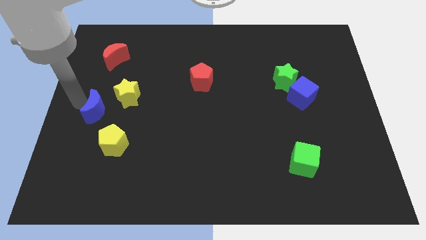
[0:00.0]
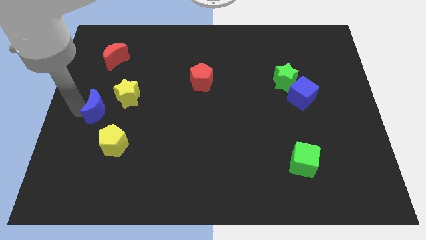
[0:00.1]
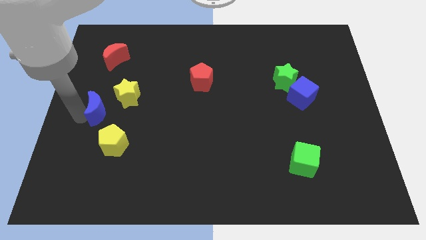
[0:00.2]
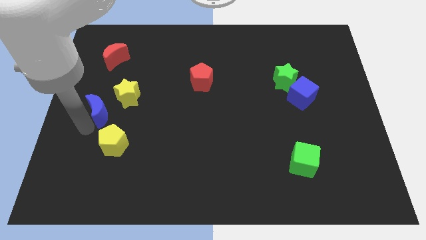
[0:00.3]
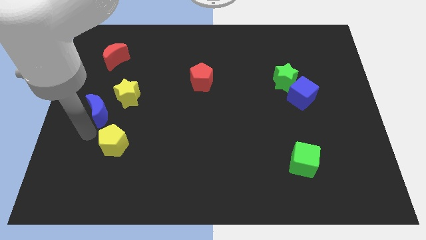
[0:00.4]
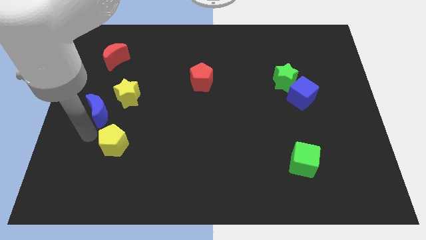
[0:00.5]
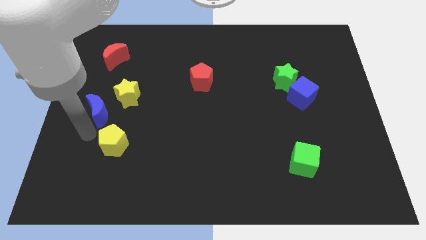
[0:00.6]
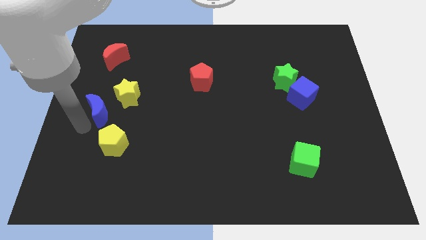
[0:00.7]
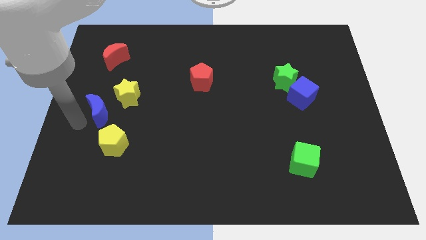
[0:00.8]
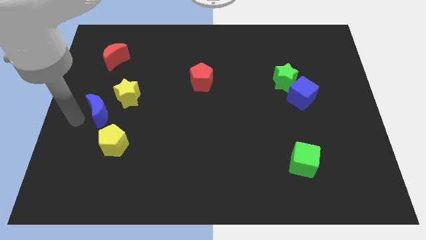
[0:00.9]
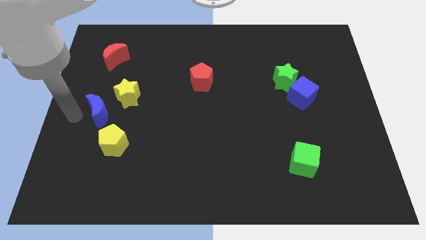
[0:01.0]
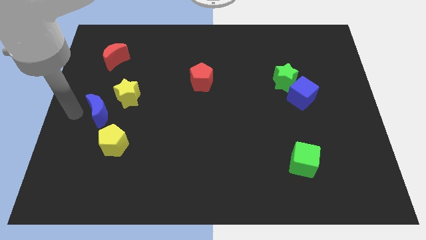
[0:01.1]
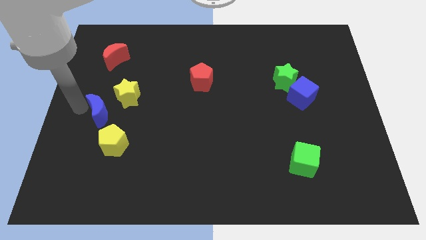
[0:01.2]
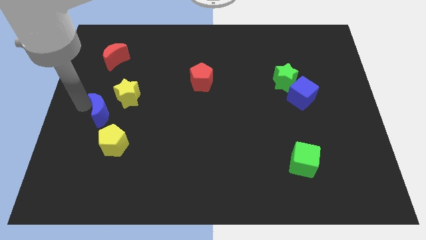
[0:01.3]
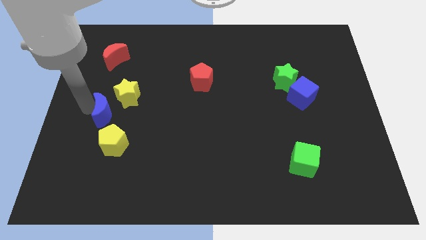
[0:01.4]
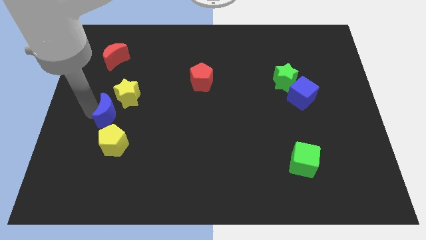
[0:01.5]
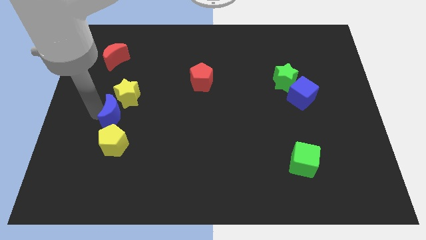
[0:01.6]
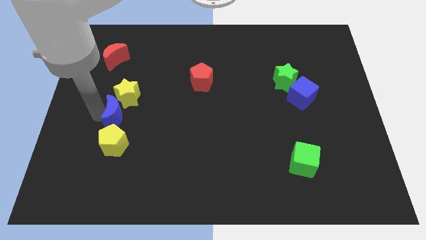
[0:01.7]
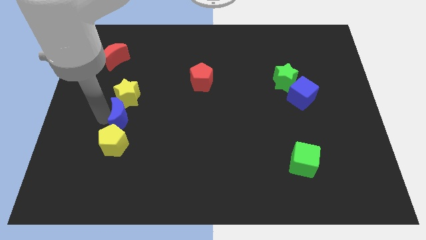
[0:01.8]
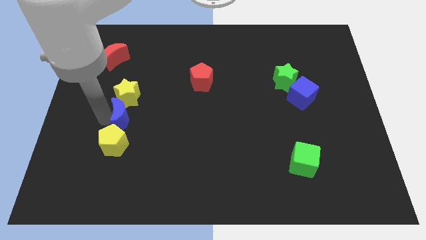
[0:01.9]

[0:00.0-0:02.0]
place blue moon in between the yellow pentagon and yellow star

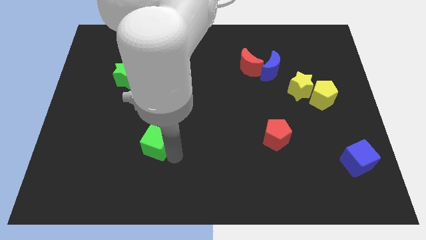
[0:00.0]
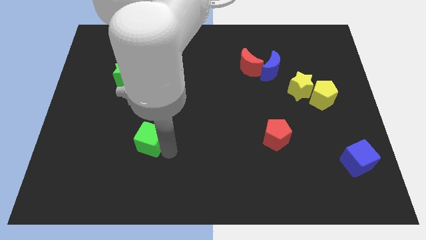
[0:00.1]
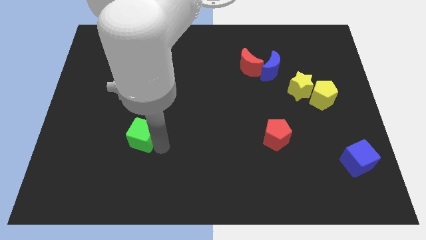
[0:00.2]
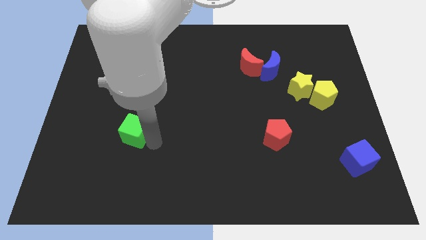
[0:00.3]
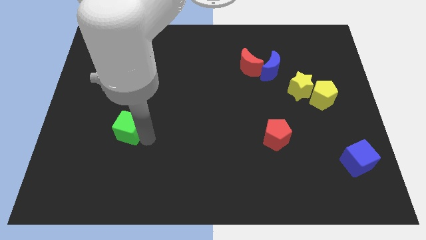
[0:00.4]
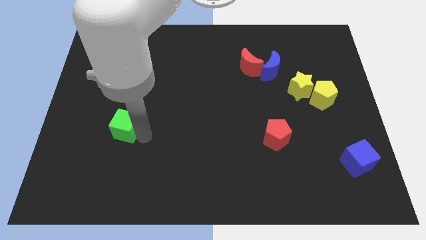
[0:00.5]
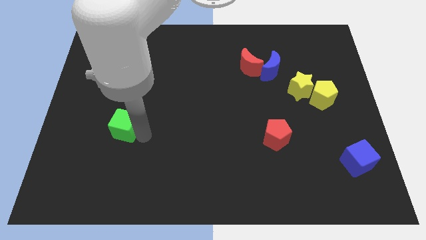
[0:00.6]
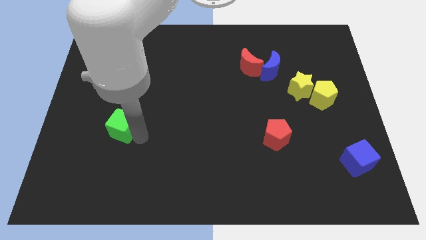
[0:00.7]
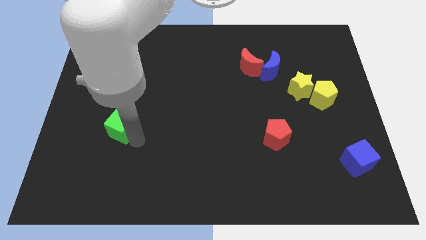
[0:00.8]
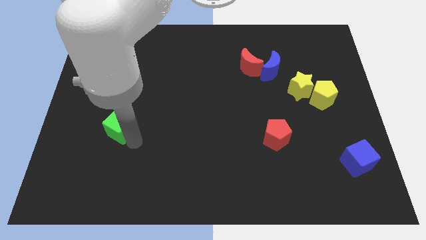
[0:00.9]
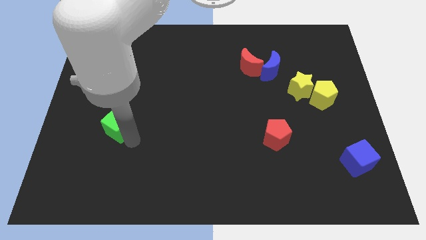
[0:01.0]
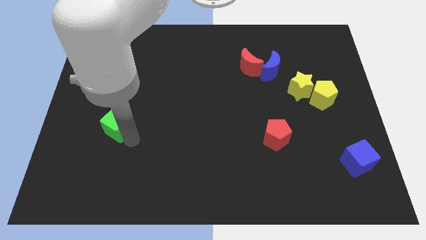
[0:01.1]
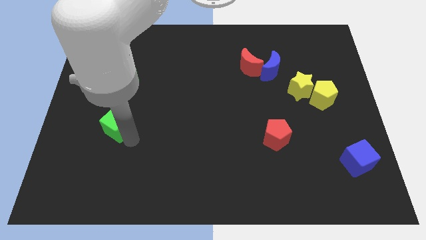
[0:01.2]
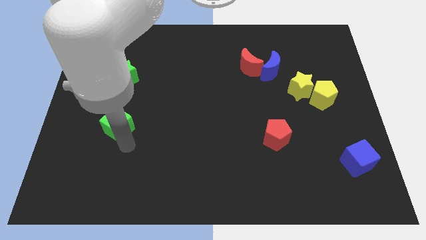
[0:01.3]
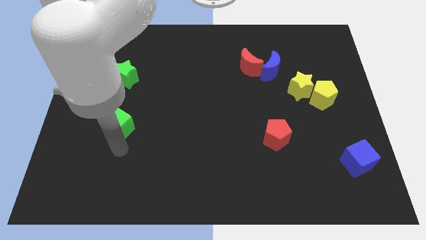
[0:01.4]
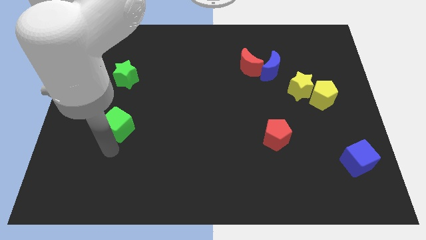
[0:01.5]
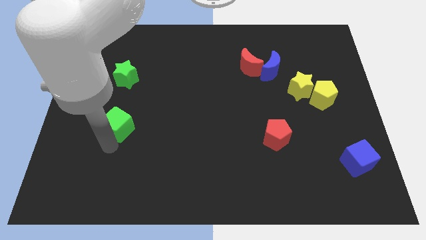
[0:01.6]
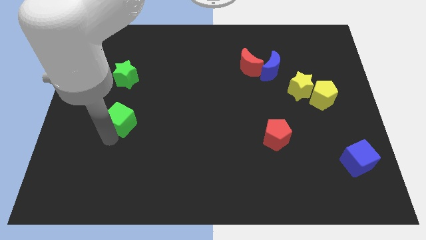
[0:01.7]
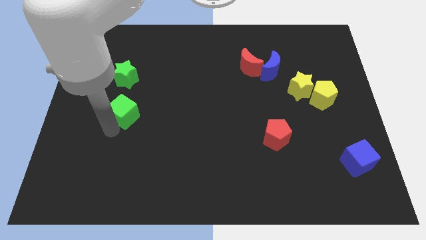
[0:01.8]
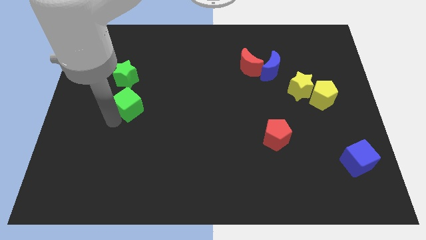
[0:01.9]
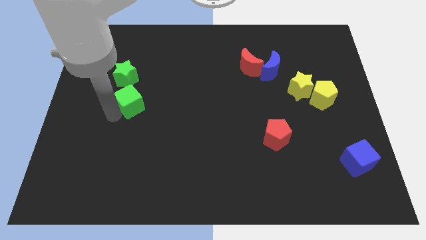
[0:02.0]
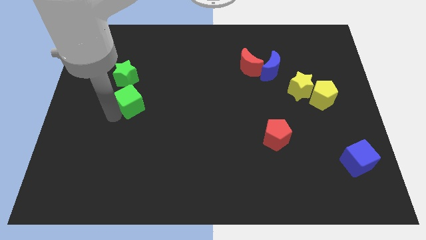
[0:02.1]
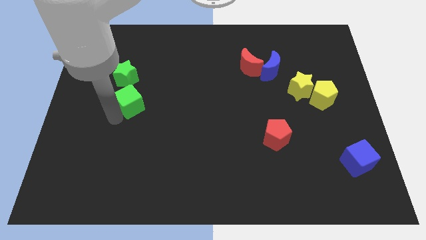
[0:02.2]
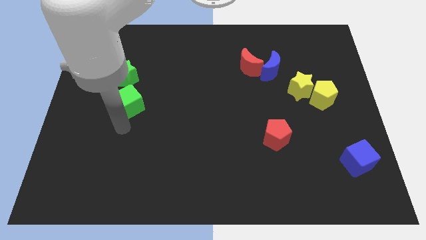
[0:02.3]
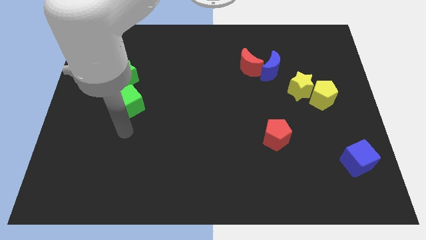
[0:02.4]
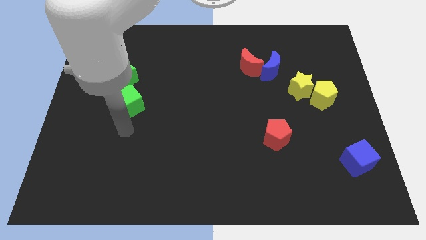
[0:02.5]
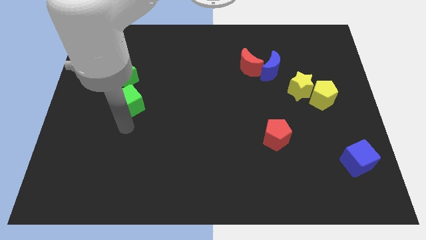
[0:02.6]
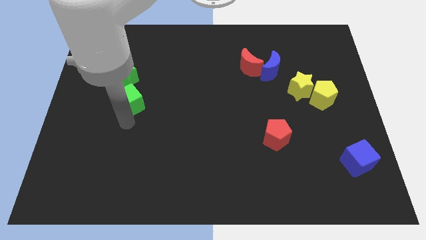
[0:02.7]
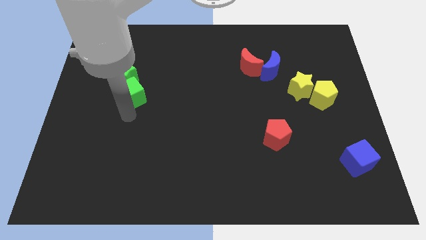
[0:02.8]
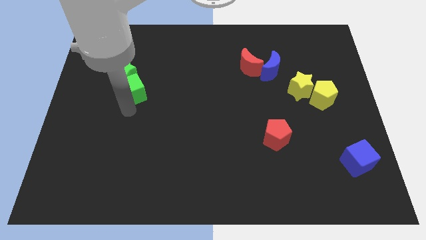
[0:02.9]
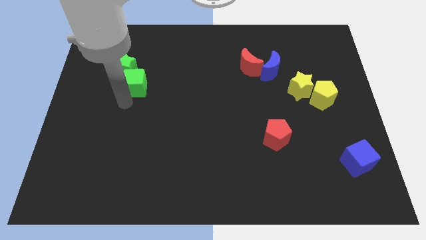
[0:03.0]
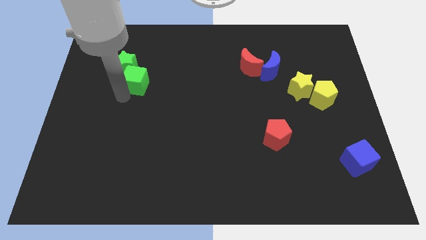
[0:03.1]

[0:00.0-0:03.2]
put the green blocks together

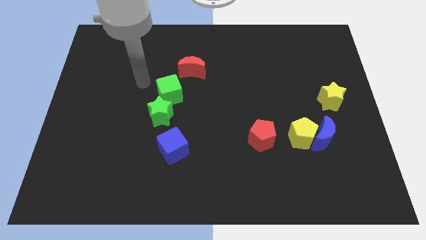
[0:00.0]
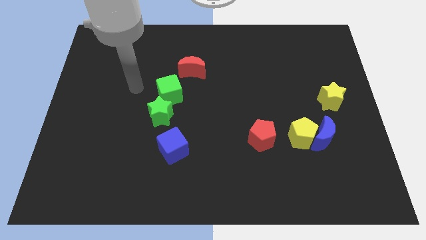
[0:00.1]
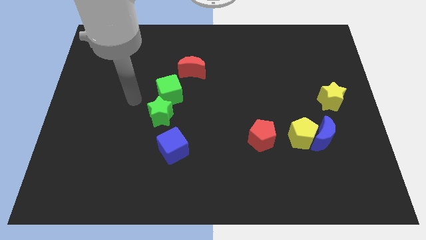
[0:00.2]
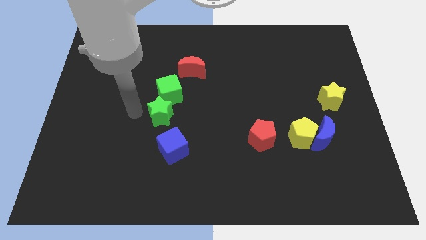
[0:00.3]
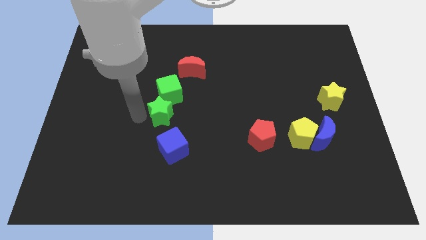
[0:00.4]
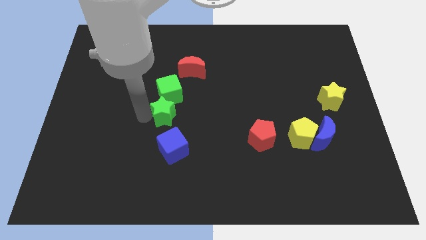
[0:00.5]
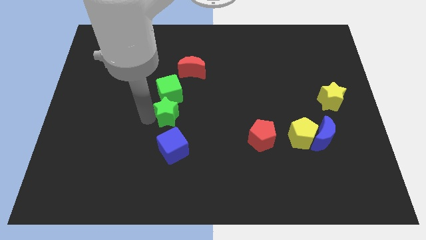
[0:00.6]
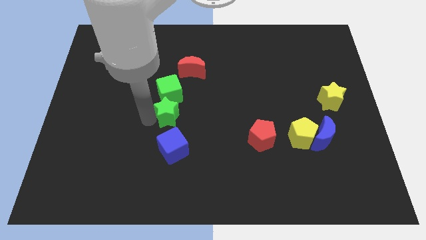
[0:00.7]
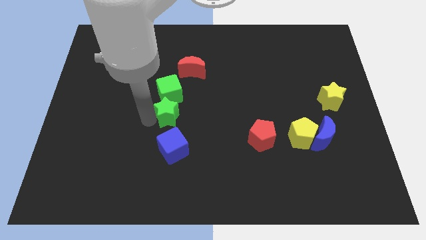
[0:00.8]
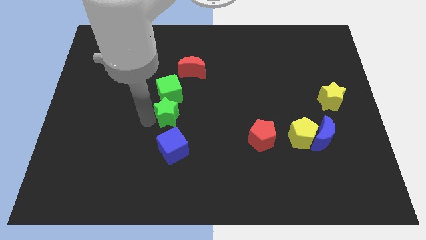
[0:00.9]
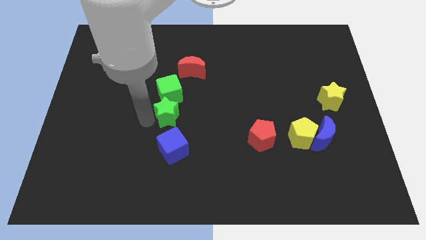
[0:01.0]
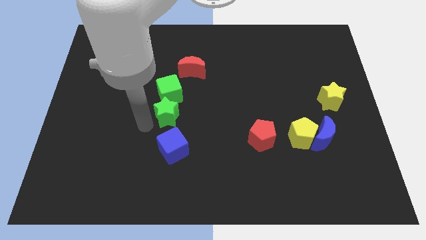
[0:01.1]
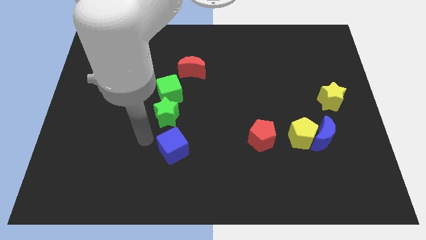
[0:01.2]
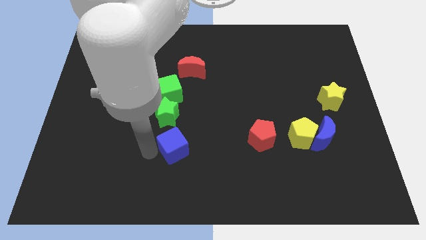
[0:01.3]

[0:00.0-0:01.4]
adjust the green star to the bottom of the green cube

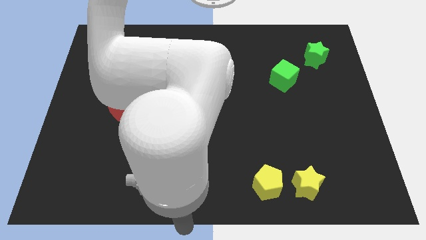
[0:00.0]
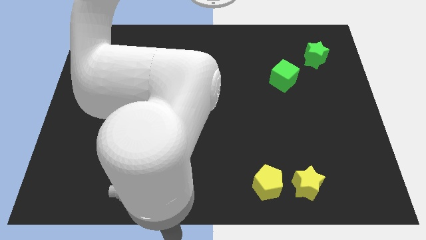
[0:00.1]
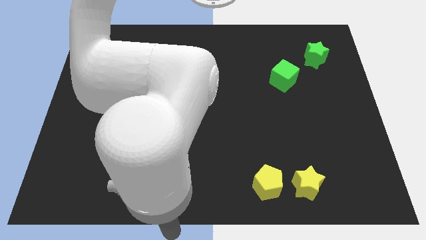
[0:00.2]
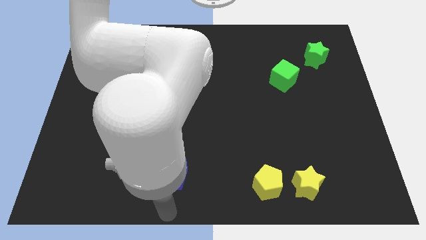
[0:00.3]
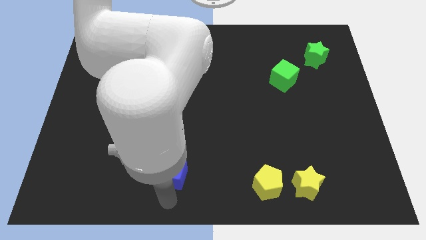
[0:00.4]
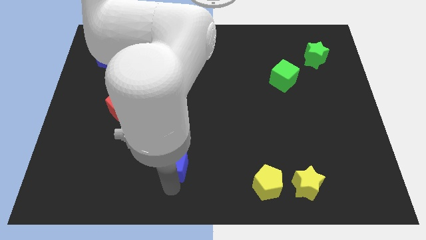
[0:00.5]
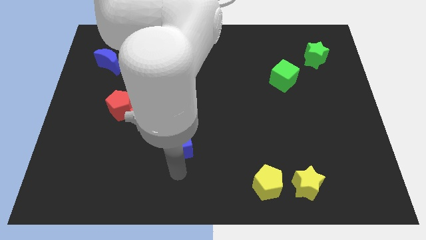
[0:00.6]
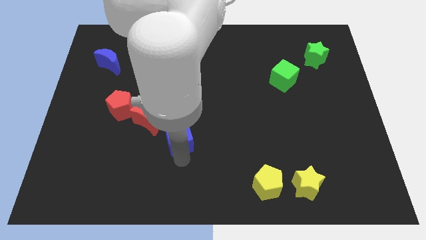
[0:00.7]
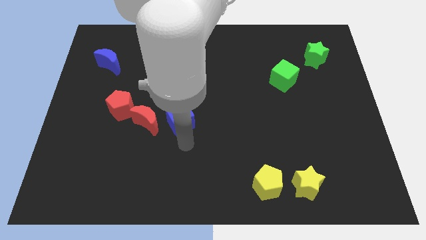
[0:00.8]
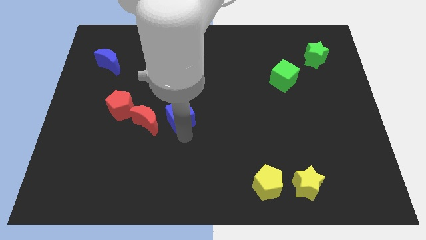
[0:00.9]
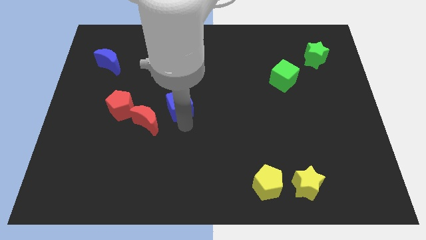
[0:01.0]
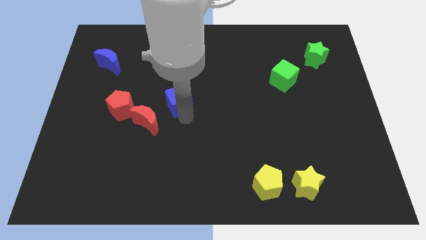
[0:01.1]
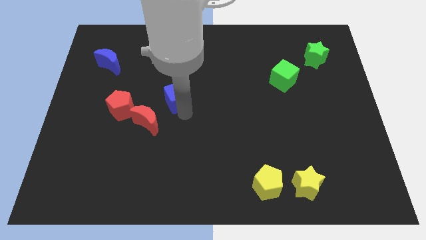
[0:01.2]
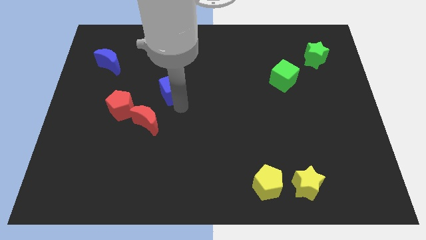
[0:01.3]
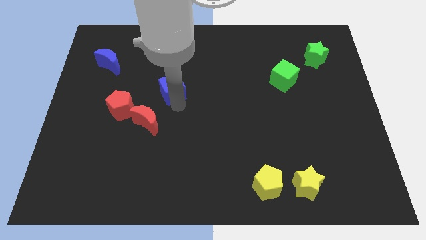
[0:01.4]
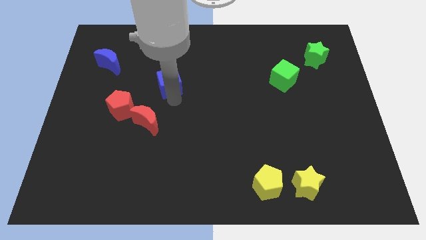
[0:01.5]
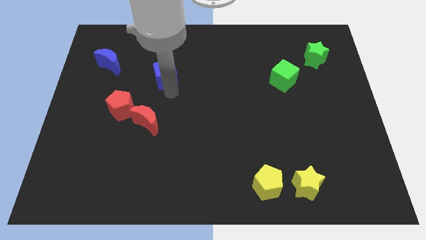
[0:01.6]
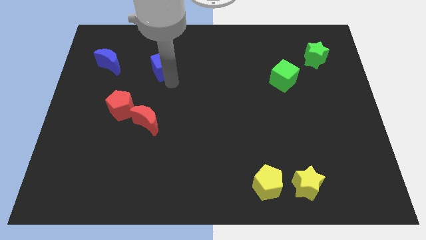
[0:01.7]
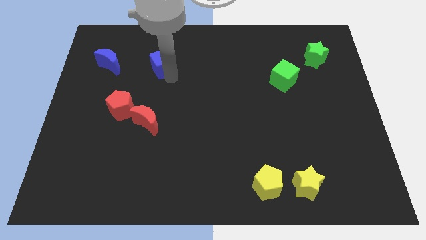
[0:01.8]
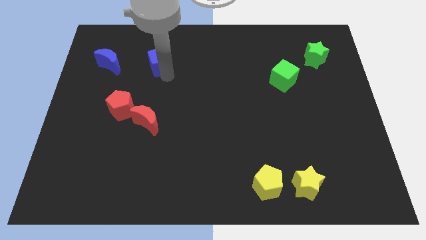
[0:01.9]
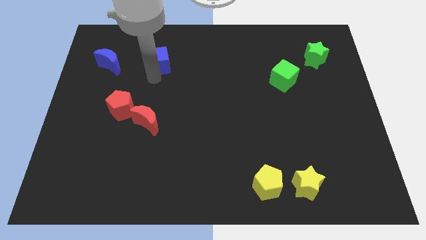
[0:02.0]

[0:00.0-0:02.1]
put blue cube to the right of blue moon

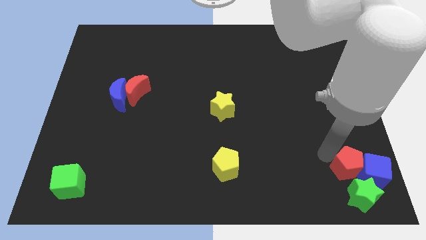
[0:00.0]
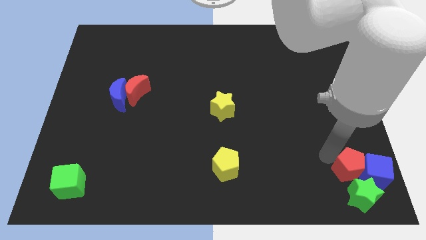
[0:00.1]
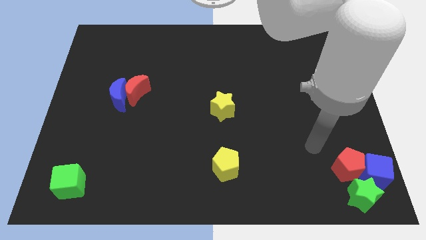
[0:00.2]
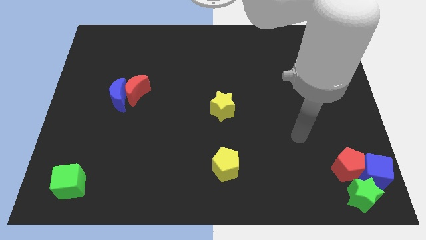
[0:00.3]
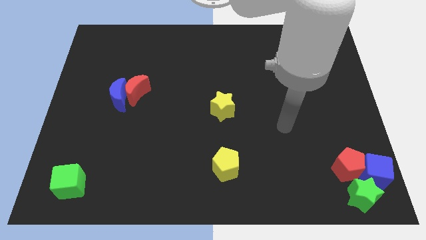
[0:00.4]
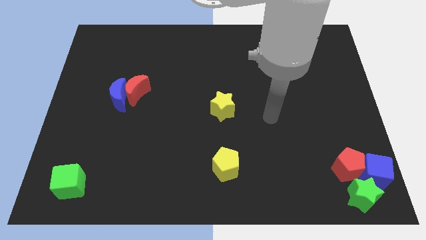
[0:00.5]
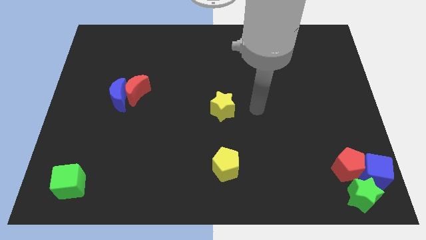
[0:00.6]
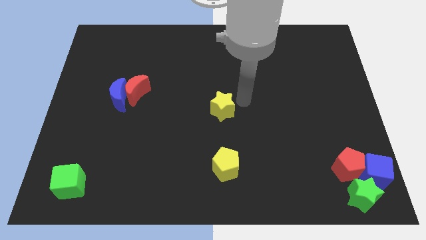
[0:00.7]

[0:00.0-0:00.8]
move your arm away from the red pentagon
